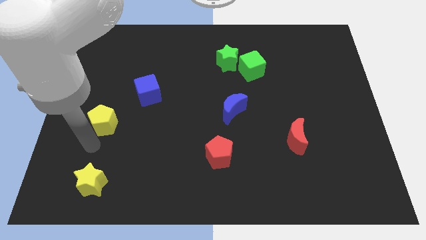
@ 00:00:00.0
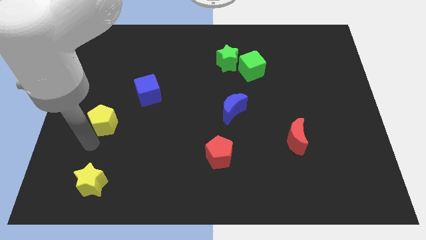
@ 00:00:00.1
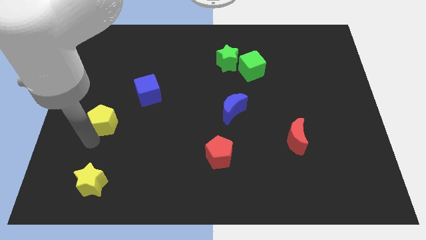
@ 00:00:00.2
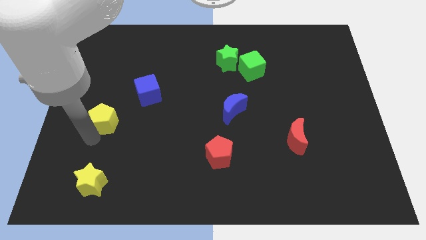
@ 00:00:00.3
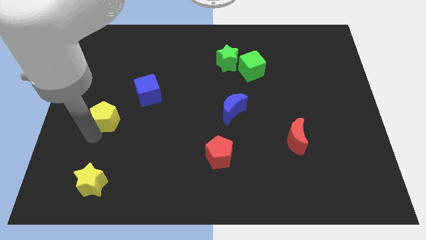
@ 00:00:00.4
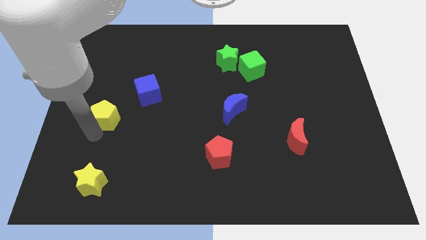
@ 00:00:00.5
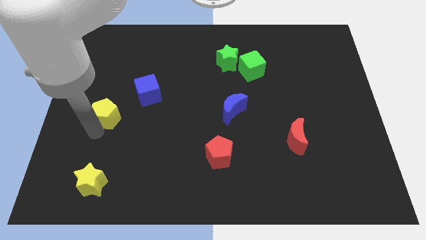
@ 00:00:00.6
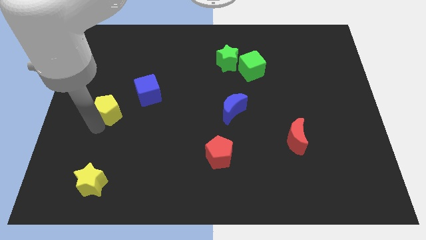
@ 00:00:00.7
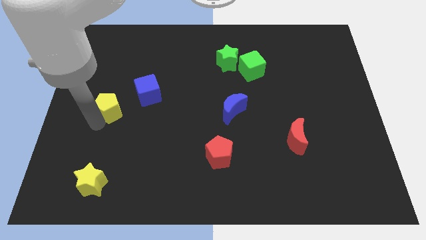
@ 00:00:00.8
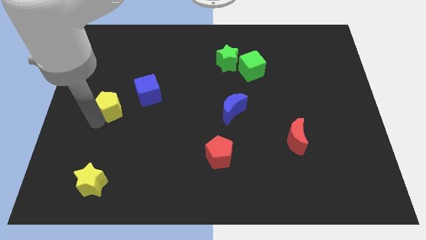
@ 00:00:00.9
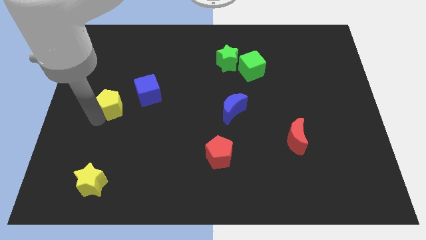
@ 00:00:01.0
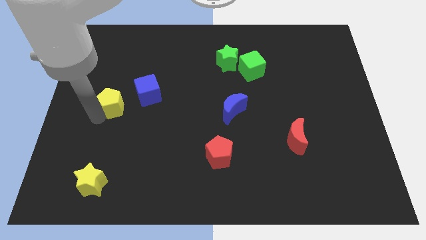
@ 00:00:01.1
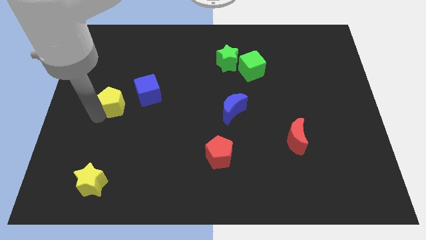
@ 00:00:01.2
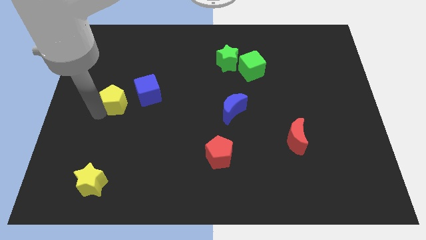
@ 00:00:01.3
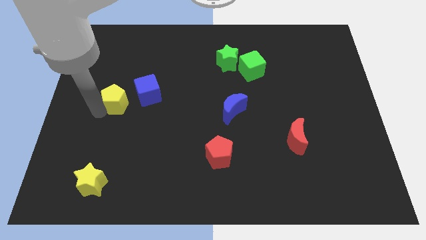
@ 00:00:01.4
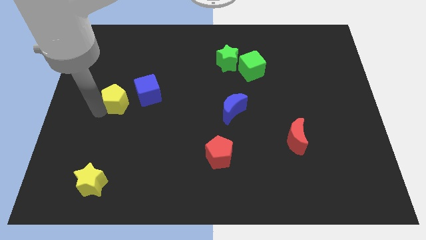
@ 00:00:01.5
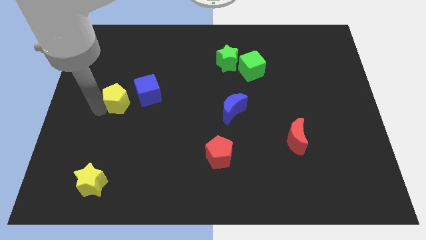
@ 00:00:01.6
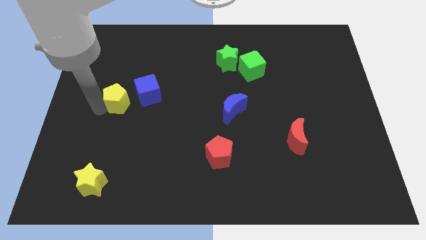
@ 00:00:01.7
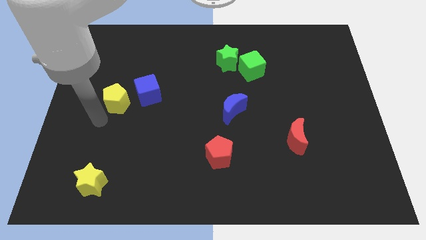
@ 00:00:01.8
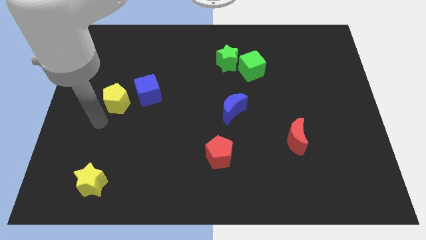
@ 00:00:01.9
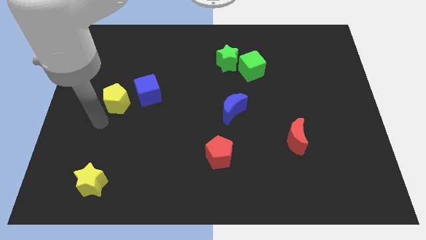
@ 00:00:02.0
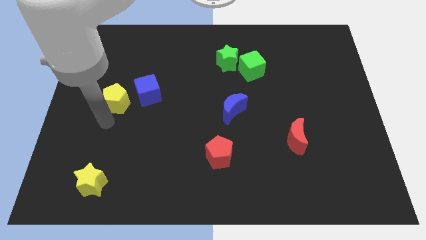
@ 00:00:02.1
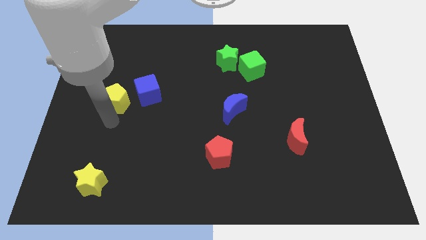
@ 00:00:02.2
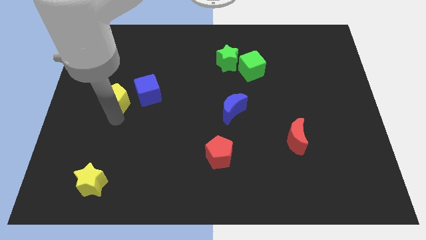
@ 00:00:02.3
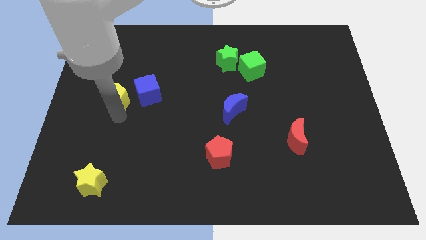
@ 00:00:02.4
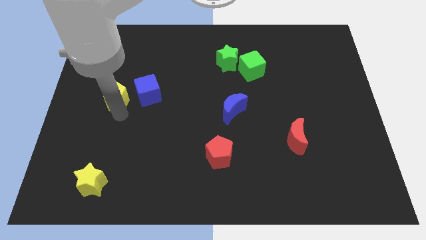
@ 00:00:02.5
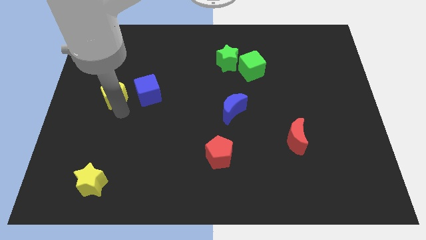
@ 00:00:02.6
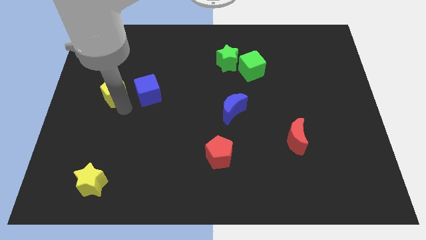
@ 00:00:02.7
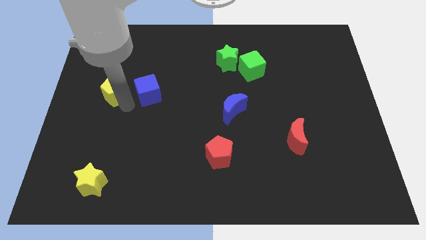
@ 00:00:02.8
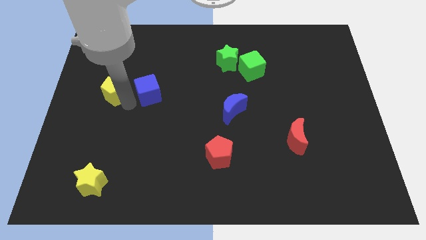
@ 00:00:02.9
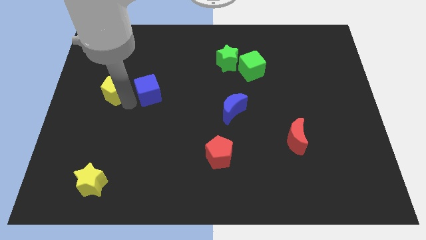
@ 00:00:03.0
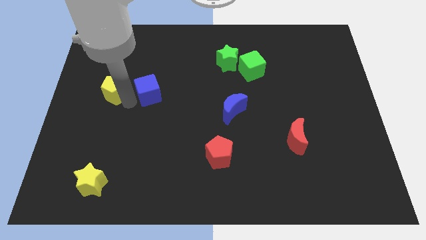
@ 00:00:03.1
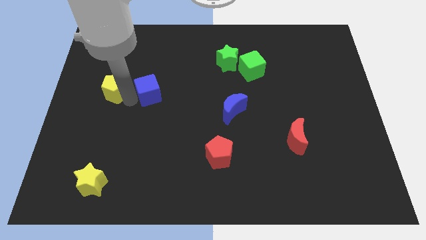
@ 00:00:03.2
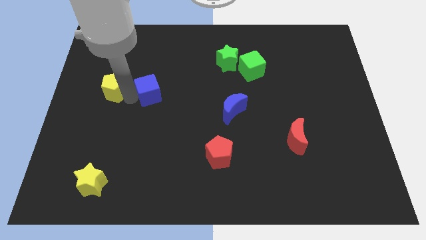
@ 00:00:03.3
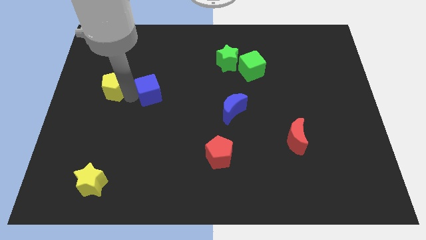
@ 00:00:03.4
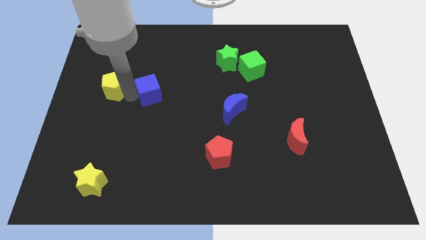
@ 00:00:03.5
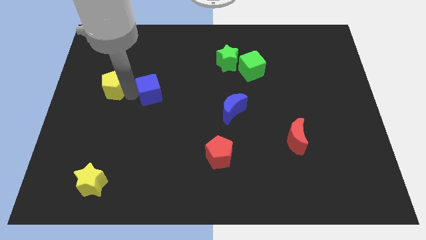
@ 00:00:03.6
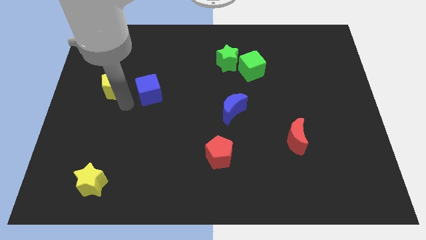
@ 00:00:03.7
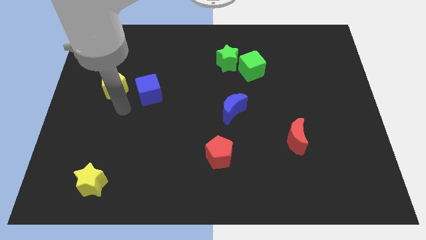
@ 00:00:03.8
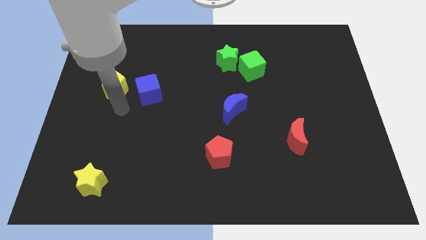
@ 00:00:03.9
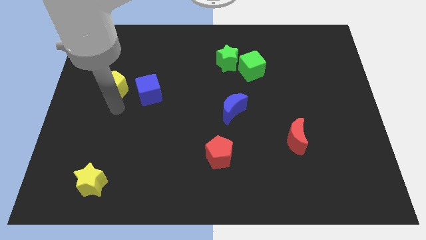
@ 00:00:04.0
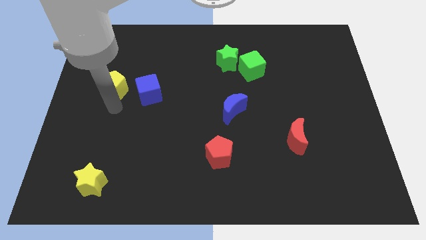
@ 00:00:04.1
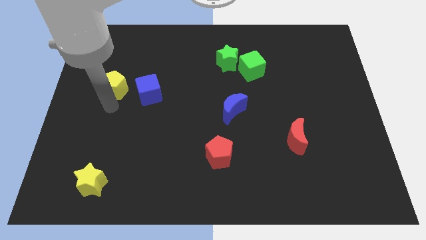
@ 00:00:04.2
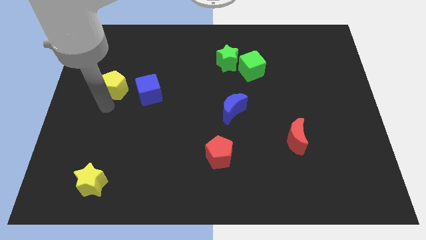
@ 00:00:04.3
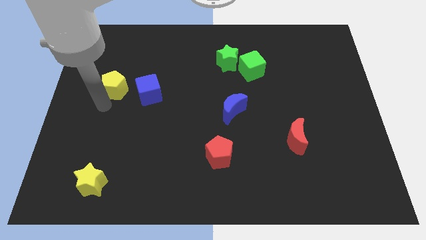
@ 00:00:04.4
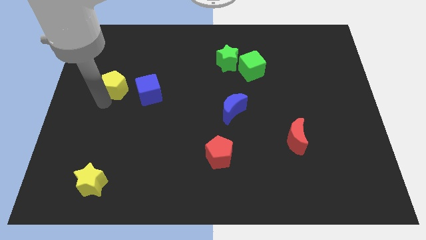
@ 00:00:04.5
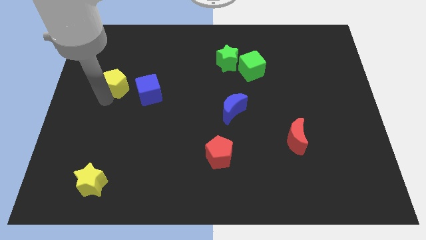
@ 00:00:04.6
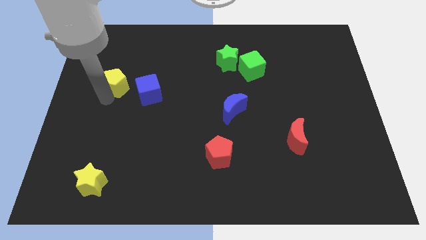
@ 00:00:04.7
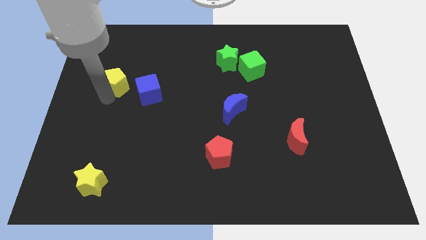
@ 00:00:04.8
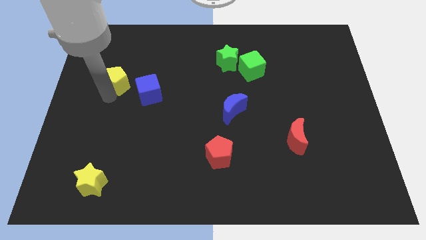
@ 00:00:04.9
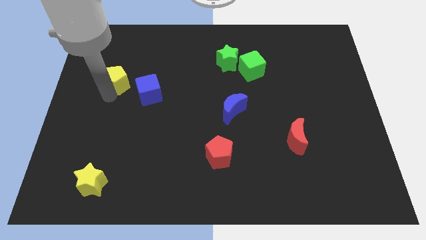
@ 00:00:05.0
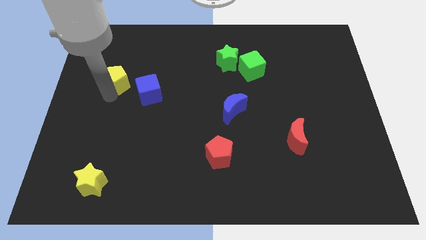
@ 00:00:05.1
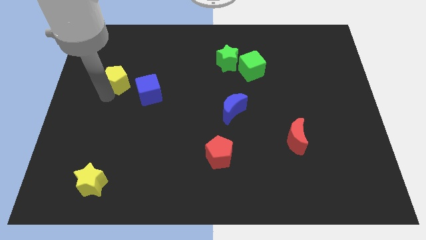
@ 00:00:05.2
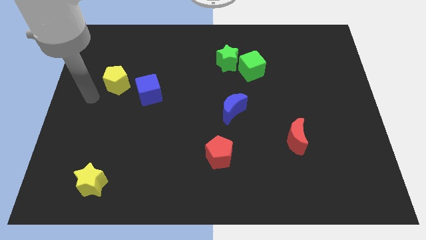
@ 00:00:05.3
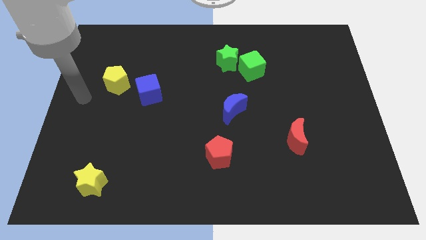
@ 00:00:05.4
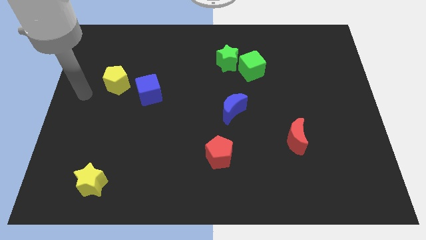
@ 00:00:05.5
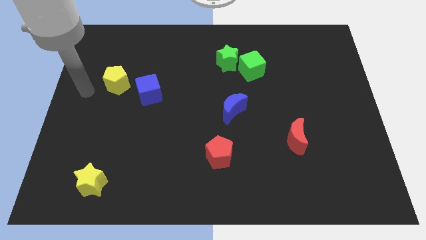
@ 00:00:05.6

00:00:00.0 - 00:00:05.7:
place the yellow pentagon towards the top left of blue cube

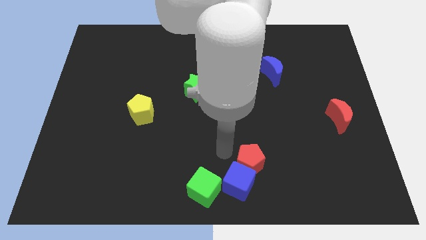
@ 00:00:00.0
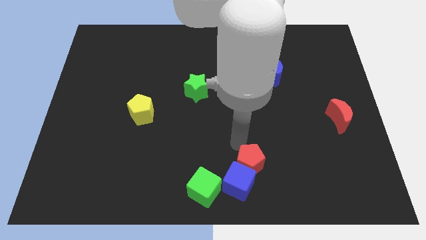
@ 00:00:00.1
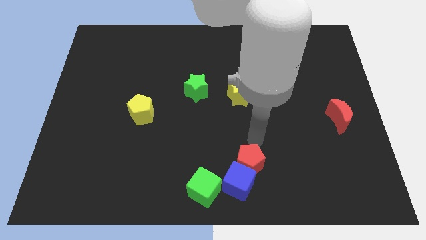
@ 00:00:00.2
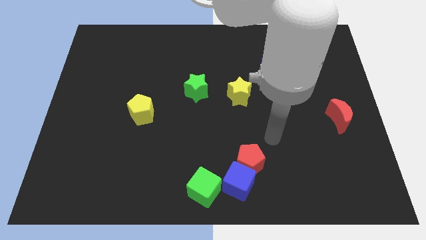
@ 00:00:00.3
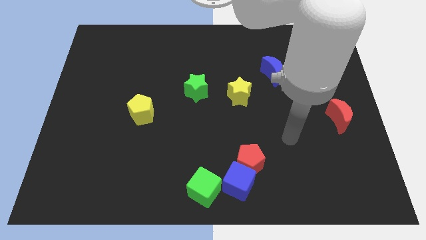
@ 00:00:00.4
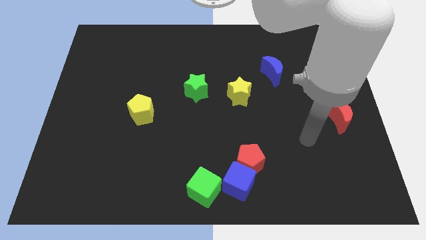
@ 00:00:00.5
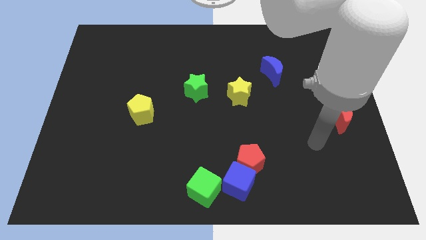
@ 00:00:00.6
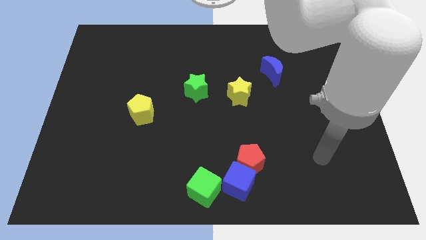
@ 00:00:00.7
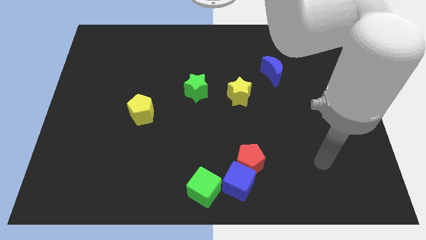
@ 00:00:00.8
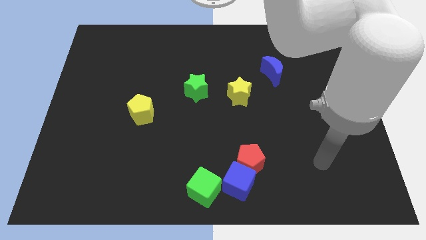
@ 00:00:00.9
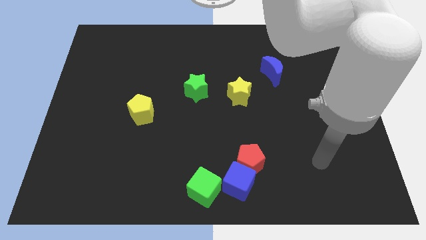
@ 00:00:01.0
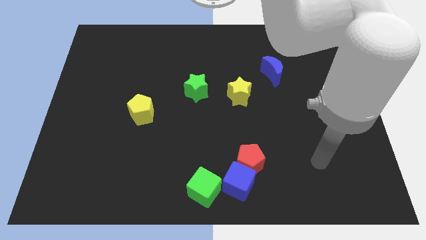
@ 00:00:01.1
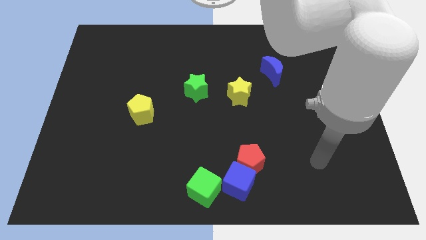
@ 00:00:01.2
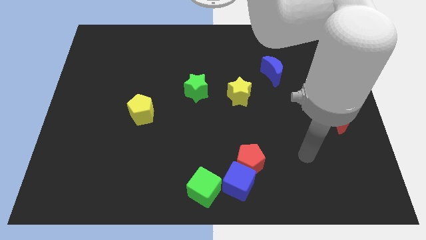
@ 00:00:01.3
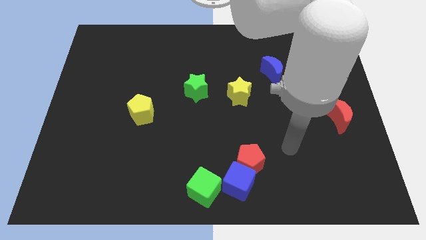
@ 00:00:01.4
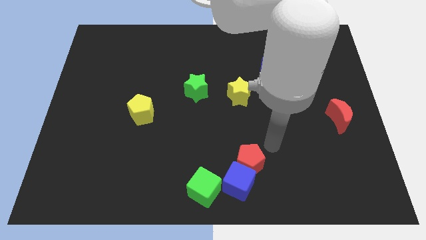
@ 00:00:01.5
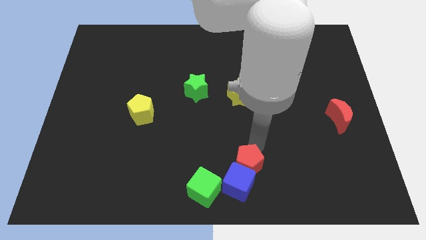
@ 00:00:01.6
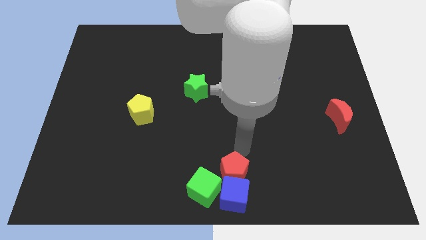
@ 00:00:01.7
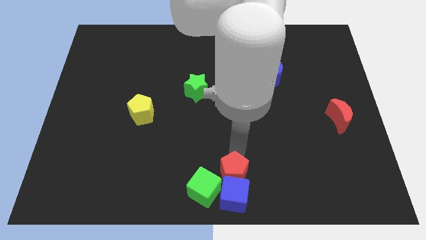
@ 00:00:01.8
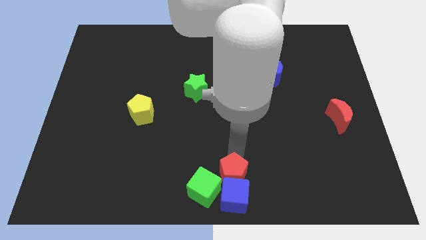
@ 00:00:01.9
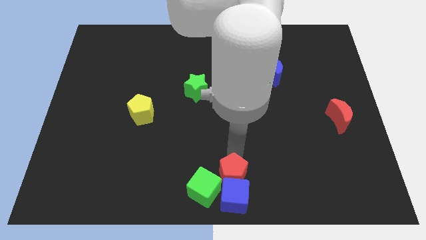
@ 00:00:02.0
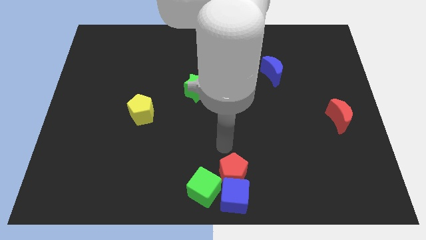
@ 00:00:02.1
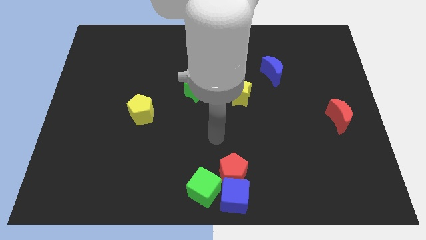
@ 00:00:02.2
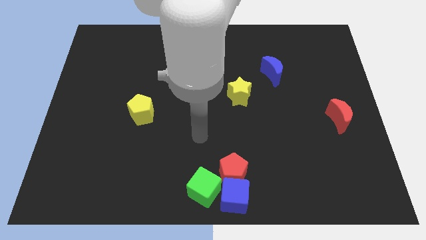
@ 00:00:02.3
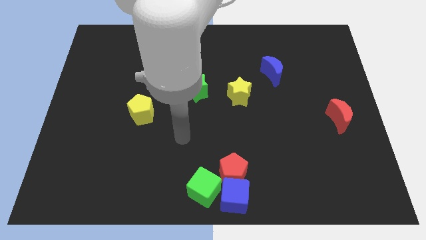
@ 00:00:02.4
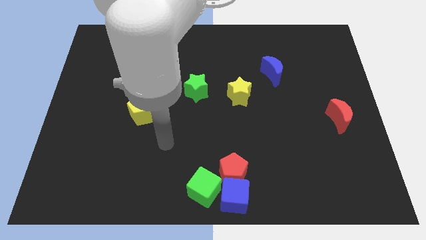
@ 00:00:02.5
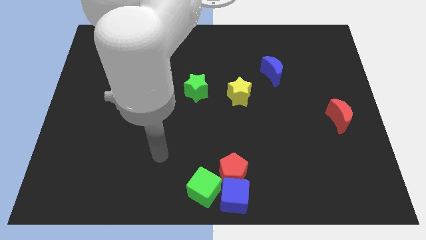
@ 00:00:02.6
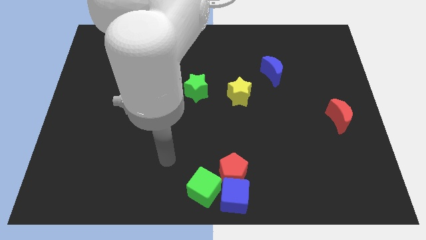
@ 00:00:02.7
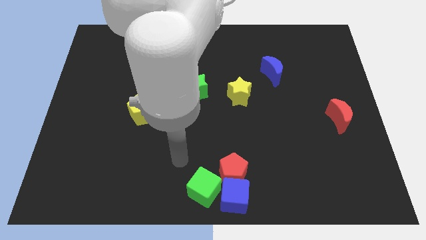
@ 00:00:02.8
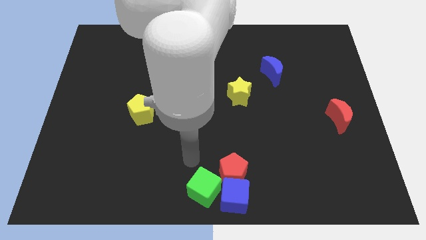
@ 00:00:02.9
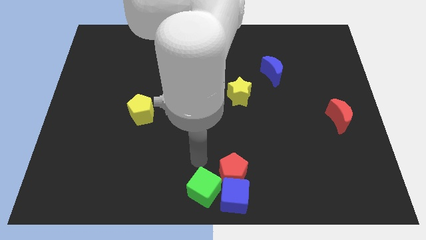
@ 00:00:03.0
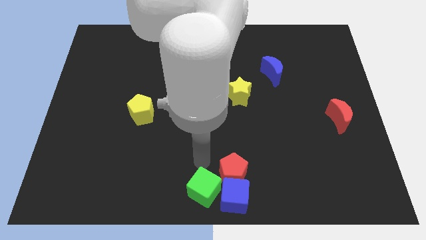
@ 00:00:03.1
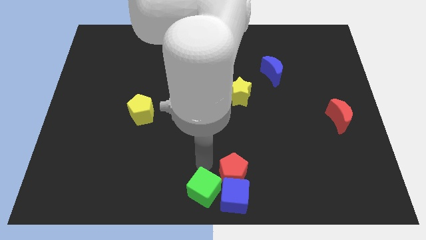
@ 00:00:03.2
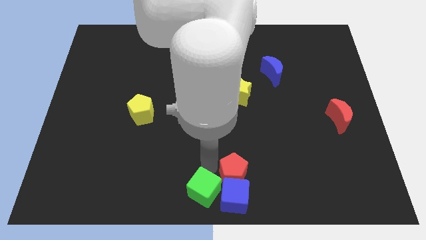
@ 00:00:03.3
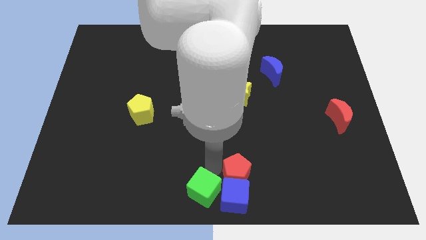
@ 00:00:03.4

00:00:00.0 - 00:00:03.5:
make a group of blocks at the bottom center of the table
